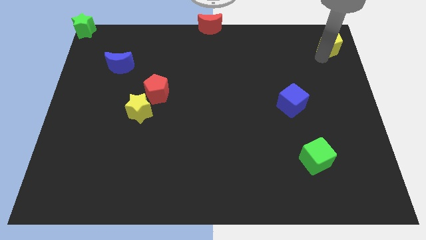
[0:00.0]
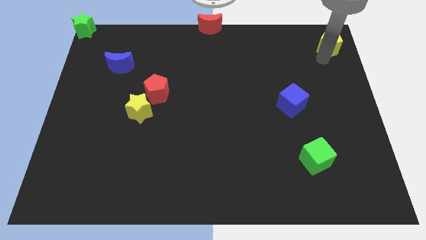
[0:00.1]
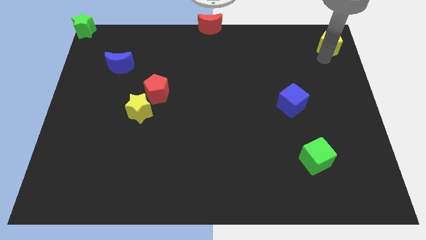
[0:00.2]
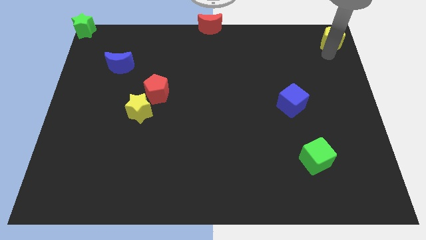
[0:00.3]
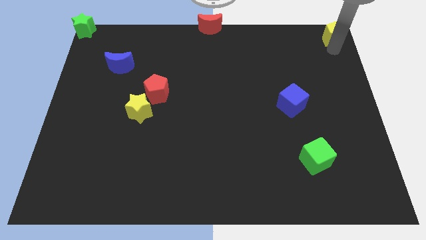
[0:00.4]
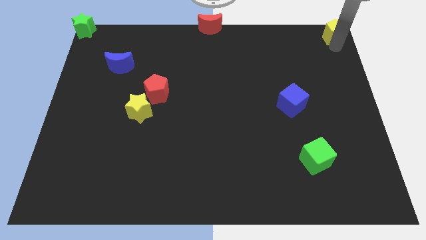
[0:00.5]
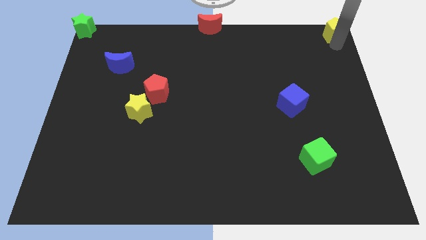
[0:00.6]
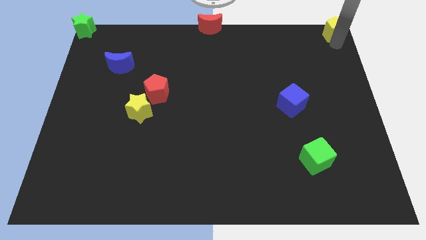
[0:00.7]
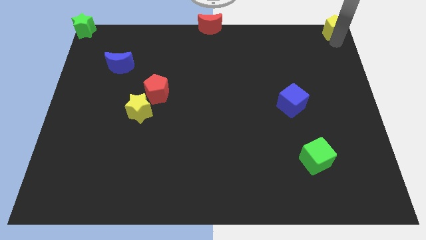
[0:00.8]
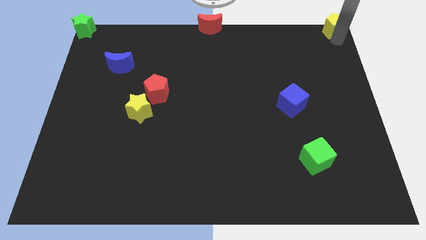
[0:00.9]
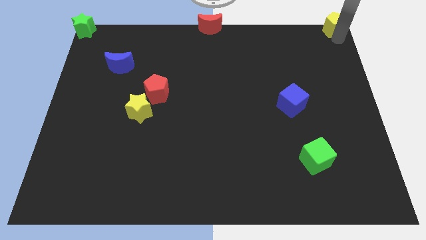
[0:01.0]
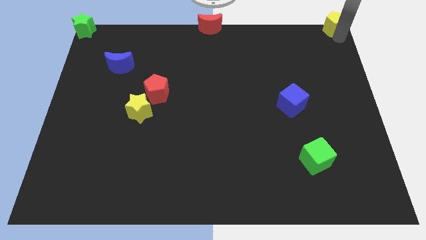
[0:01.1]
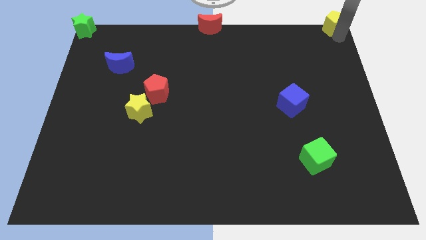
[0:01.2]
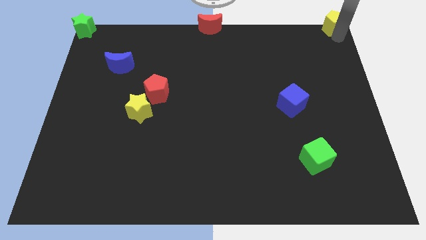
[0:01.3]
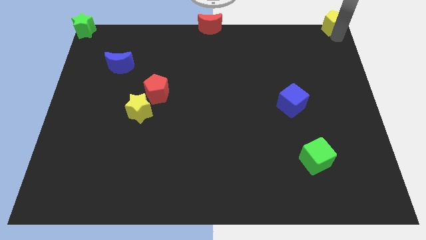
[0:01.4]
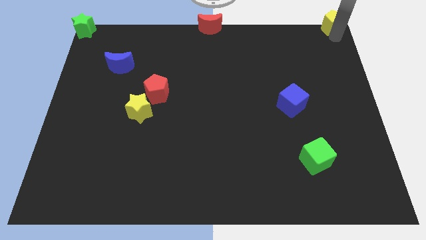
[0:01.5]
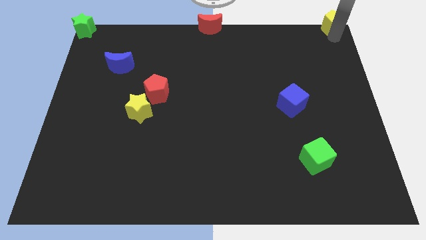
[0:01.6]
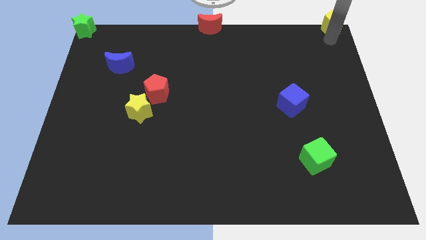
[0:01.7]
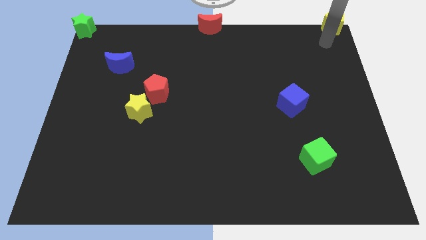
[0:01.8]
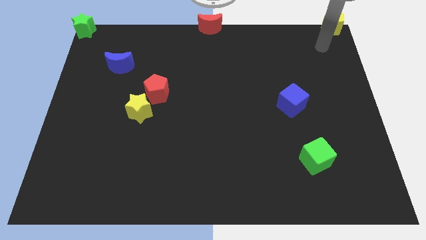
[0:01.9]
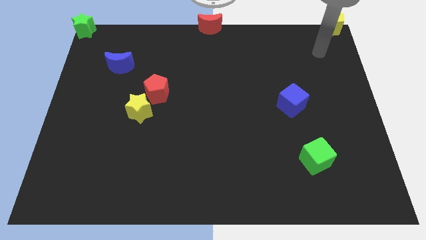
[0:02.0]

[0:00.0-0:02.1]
move yellow pentagon top right of the board

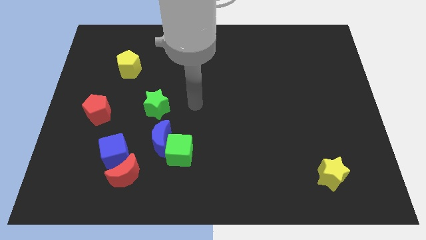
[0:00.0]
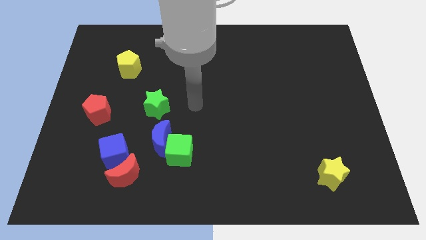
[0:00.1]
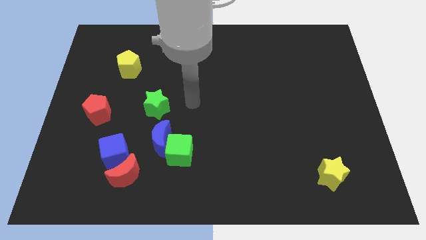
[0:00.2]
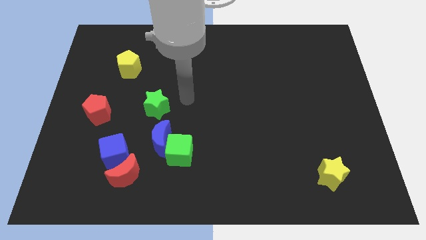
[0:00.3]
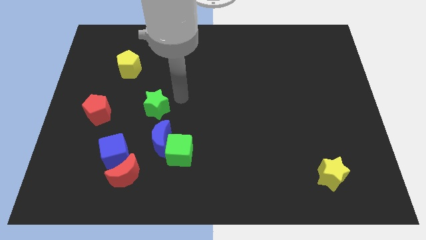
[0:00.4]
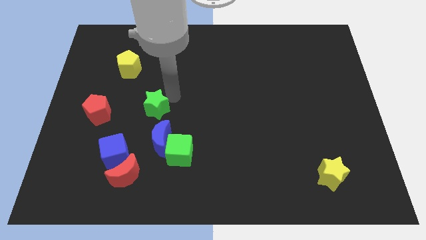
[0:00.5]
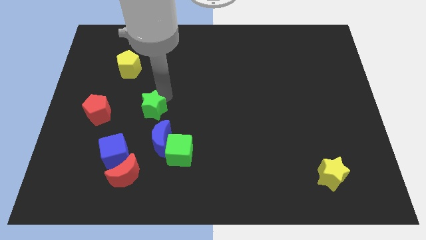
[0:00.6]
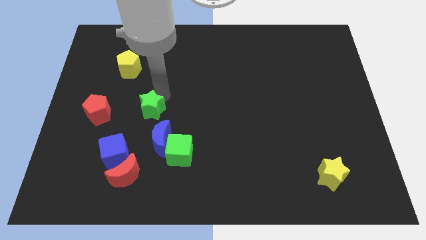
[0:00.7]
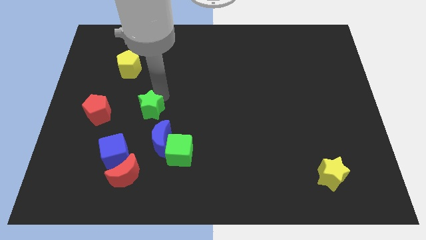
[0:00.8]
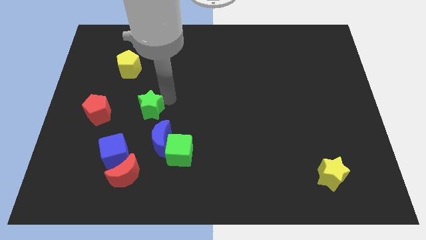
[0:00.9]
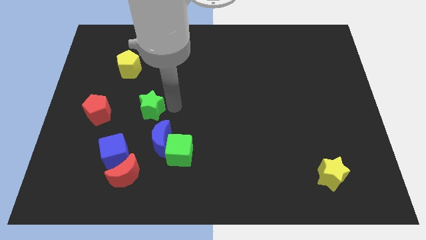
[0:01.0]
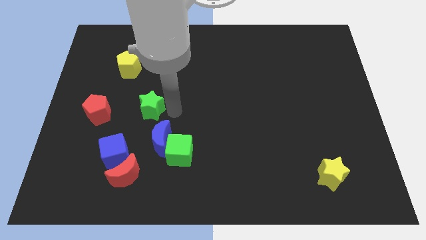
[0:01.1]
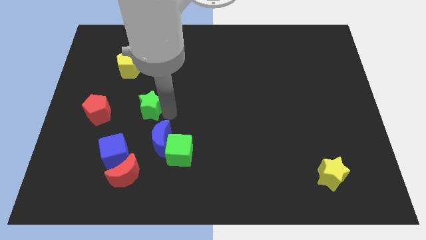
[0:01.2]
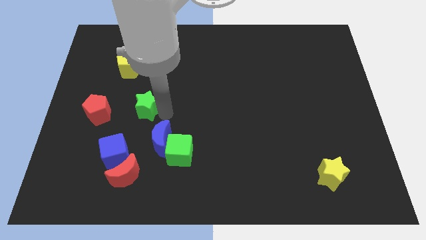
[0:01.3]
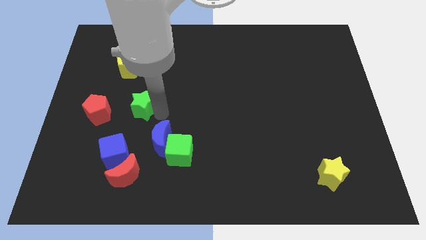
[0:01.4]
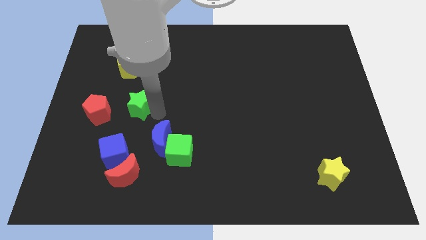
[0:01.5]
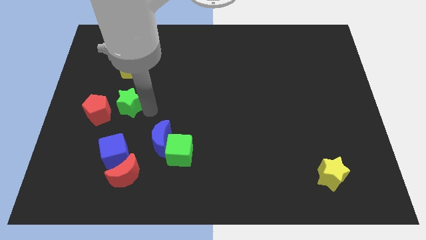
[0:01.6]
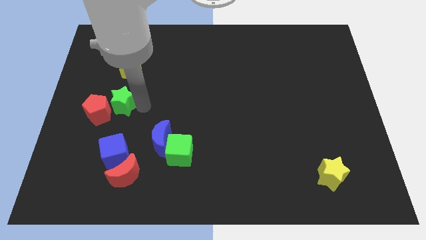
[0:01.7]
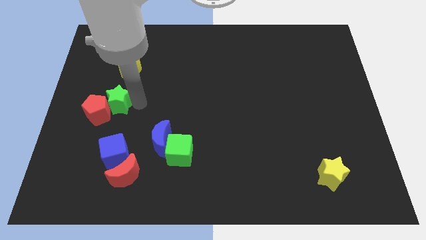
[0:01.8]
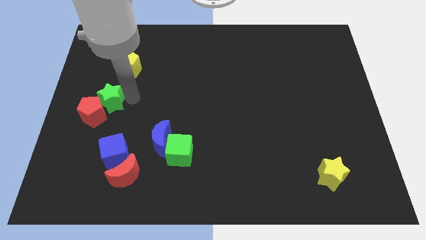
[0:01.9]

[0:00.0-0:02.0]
push the green star into the red pentagon

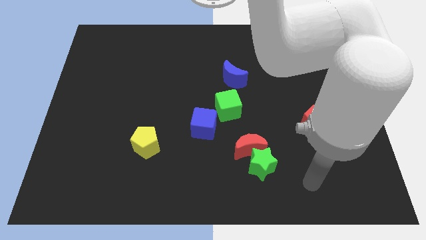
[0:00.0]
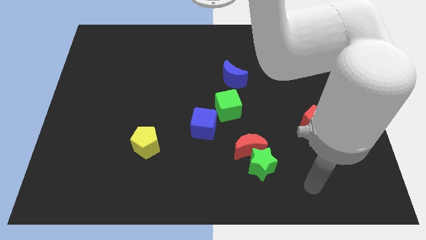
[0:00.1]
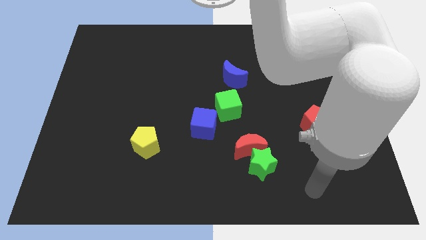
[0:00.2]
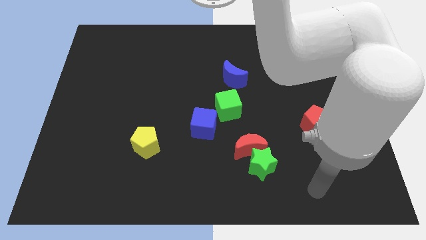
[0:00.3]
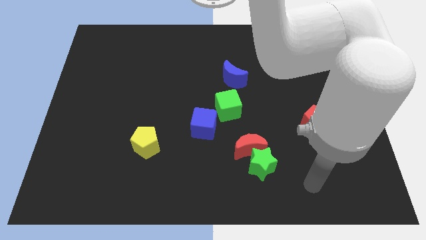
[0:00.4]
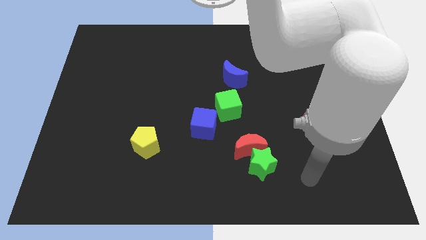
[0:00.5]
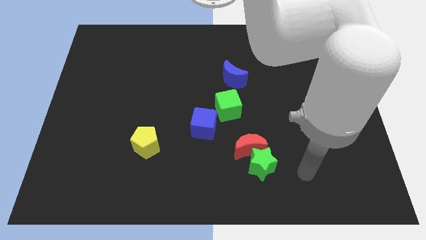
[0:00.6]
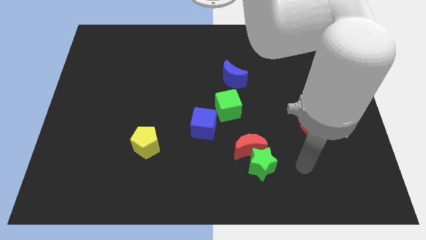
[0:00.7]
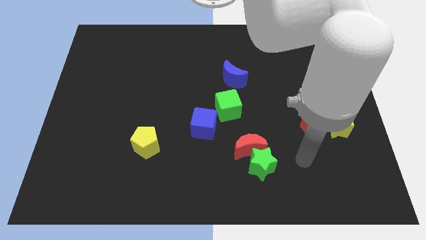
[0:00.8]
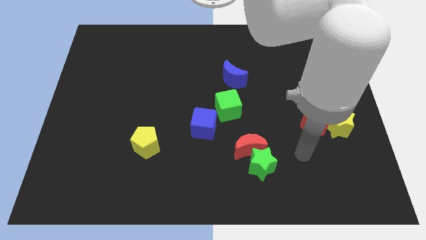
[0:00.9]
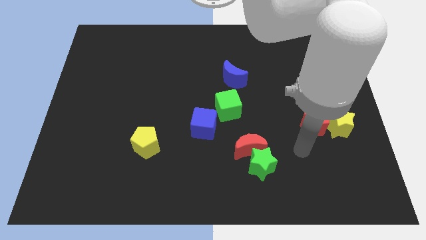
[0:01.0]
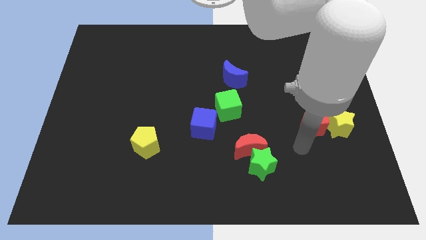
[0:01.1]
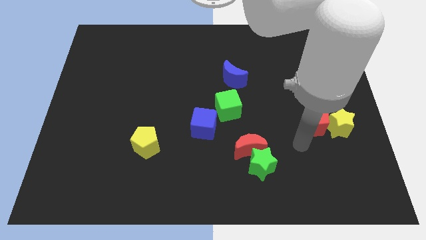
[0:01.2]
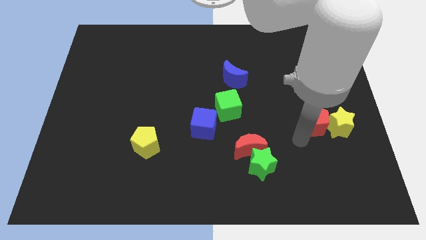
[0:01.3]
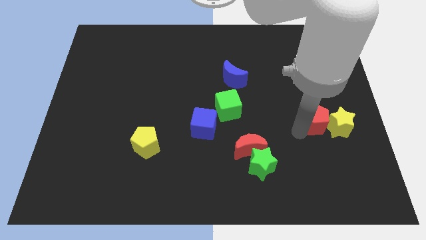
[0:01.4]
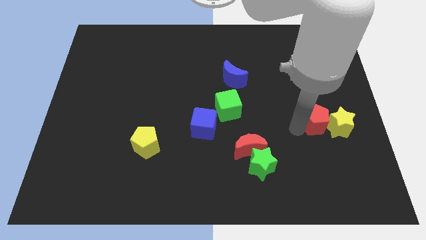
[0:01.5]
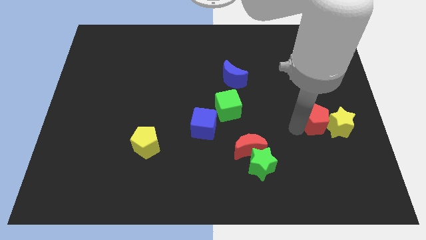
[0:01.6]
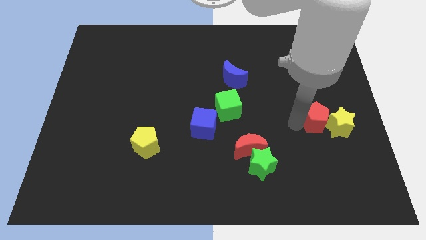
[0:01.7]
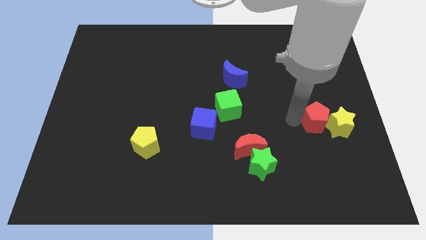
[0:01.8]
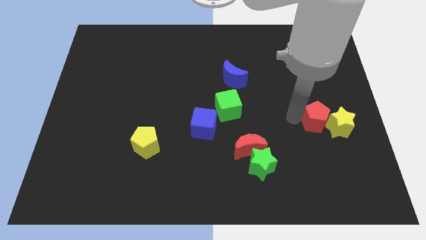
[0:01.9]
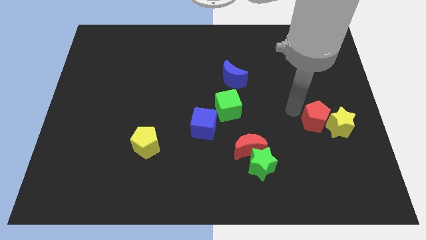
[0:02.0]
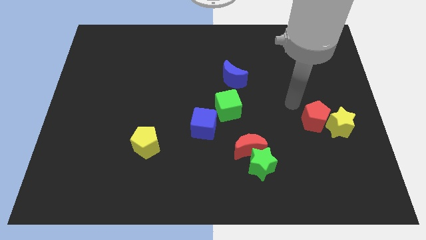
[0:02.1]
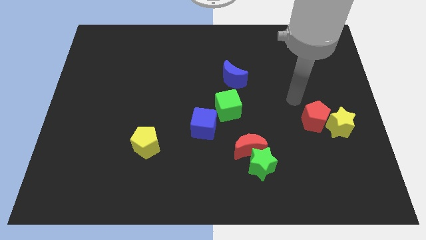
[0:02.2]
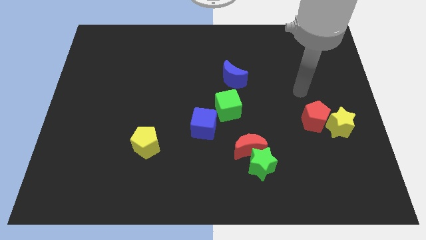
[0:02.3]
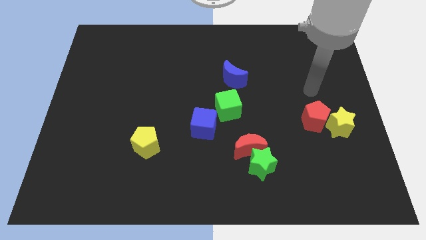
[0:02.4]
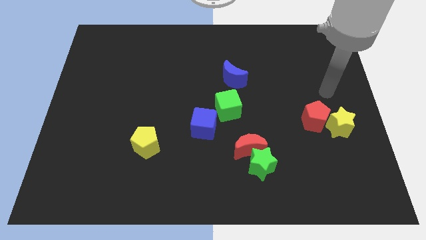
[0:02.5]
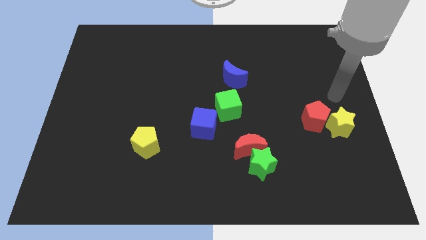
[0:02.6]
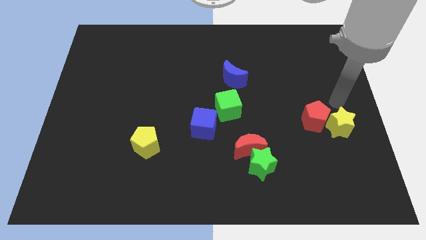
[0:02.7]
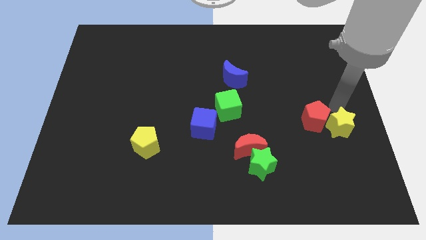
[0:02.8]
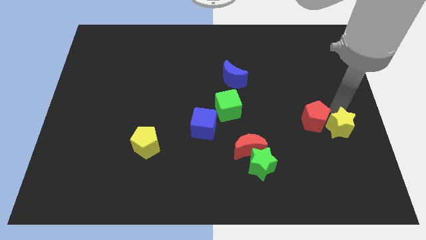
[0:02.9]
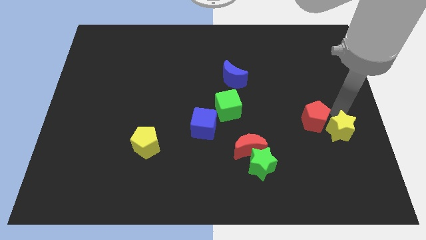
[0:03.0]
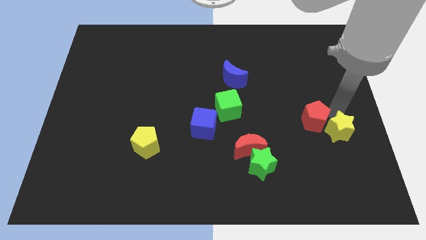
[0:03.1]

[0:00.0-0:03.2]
touch the yellow star

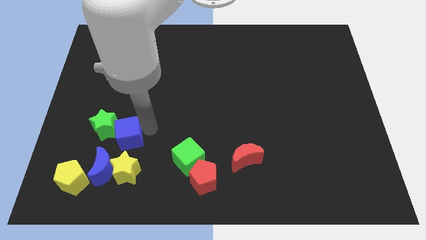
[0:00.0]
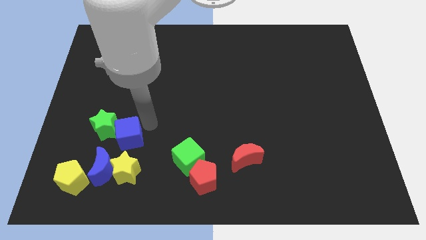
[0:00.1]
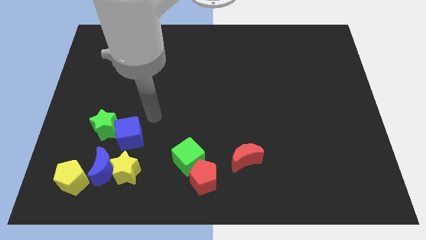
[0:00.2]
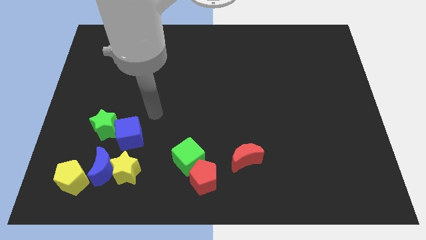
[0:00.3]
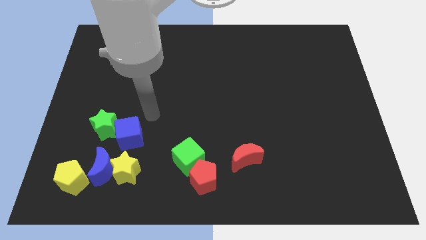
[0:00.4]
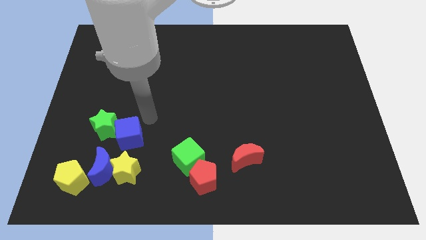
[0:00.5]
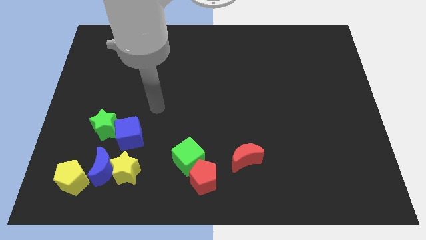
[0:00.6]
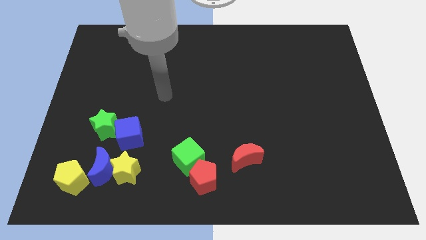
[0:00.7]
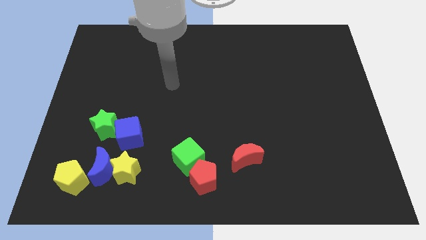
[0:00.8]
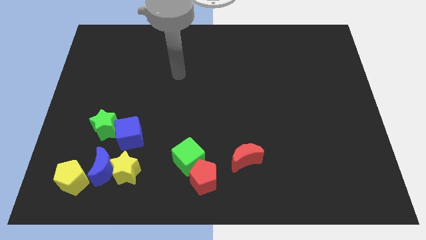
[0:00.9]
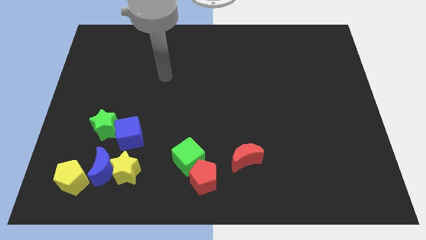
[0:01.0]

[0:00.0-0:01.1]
move the pointer away from the blue cube

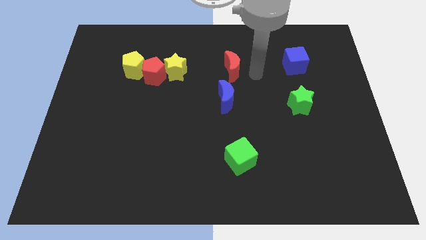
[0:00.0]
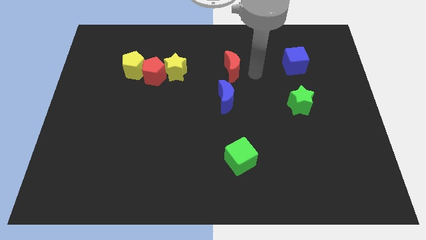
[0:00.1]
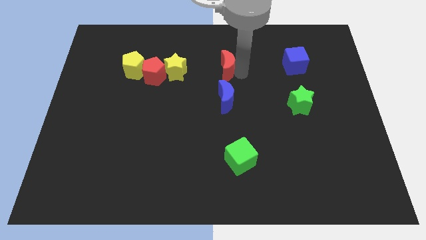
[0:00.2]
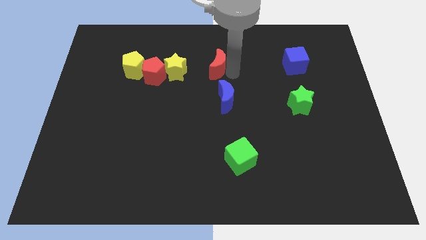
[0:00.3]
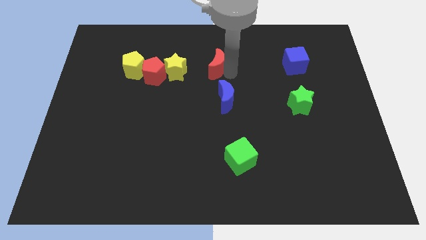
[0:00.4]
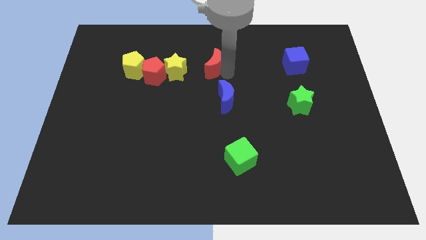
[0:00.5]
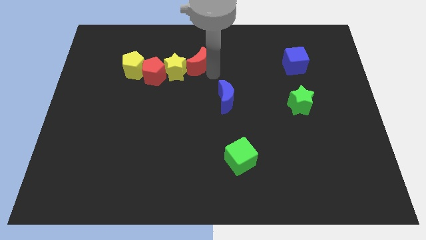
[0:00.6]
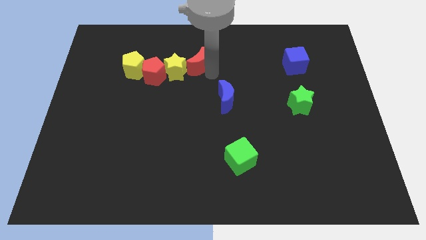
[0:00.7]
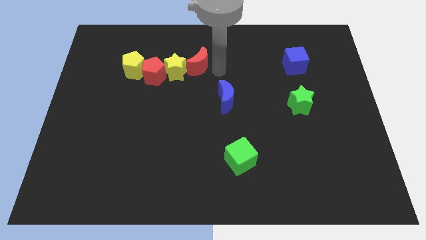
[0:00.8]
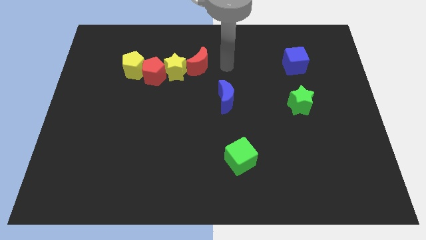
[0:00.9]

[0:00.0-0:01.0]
place red crescent beside yellow star
